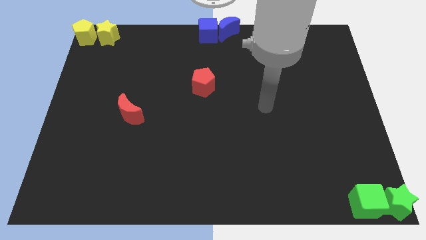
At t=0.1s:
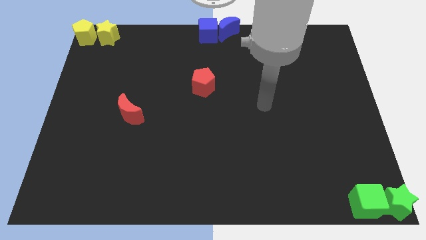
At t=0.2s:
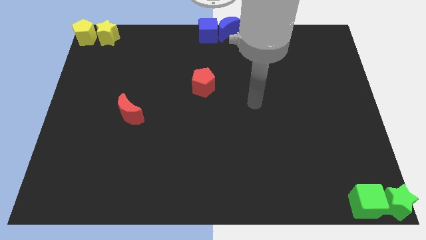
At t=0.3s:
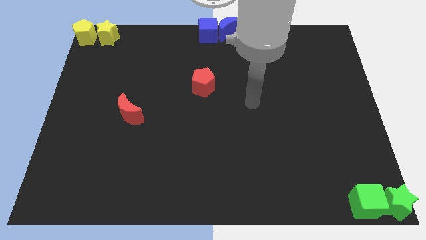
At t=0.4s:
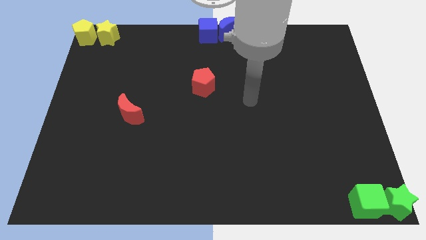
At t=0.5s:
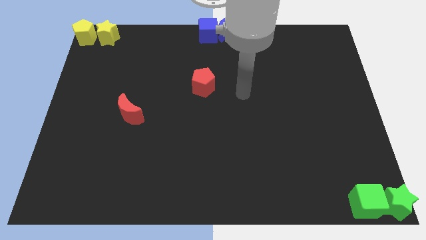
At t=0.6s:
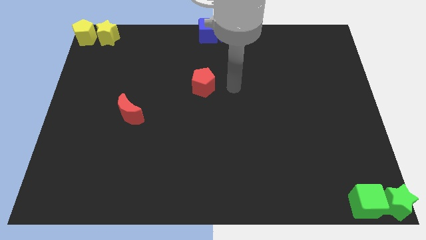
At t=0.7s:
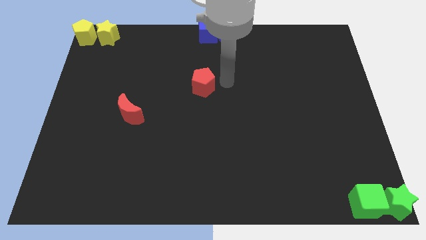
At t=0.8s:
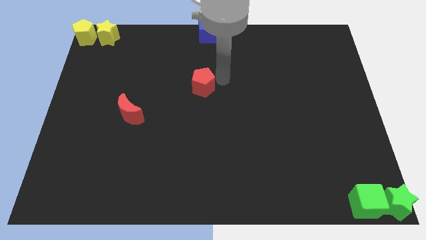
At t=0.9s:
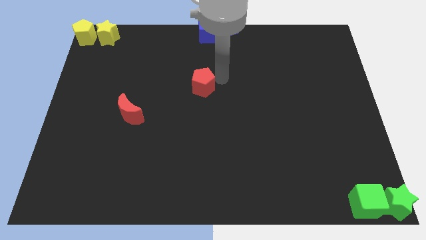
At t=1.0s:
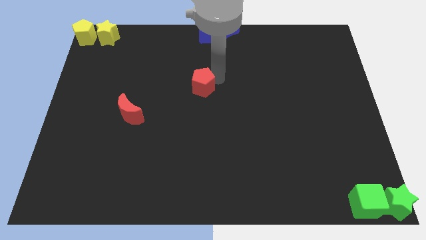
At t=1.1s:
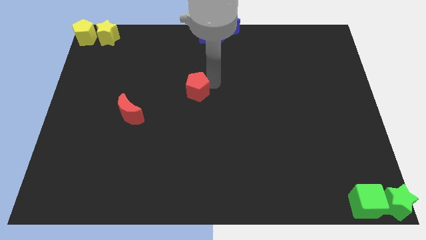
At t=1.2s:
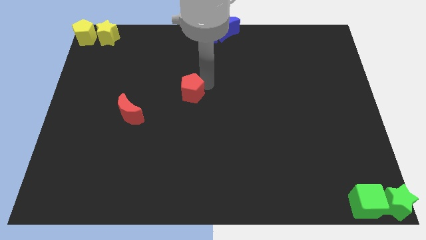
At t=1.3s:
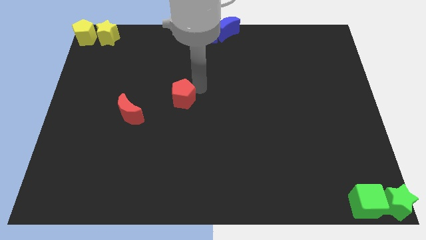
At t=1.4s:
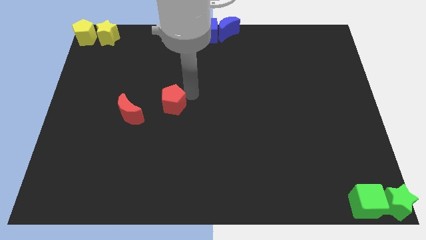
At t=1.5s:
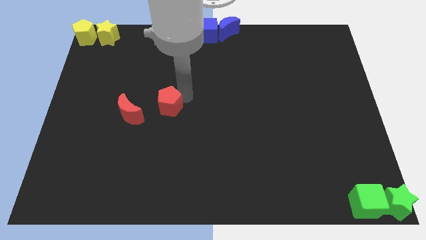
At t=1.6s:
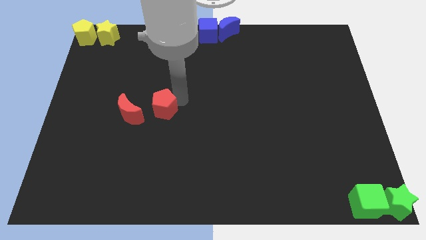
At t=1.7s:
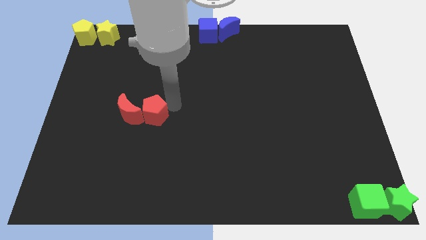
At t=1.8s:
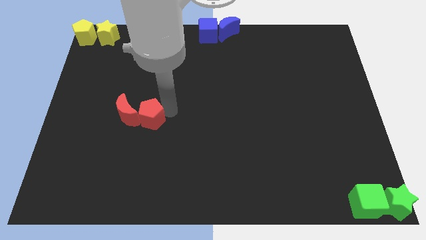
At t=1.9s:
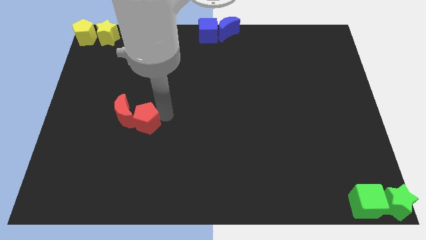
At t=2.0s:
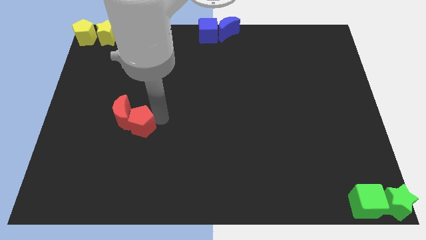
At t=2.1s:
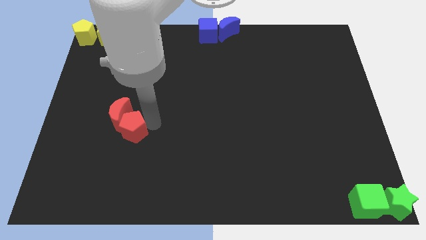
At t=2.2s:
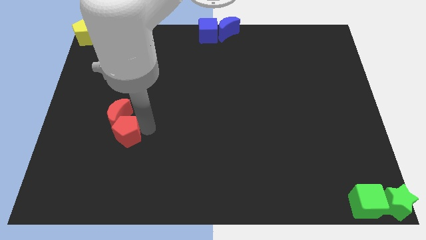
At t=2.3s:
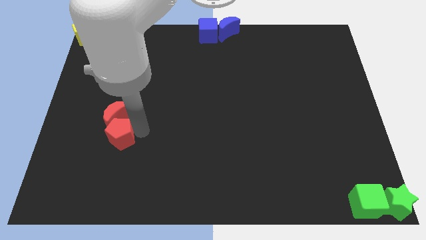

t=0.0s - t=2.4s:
move the red pentagon away from the vertical bottom side of the blue cube

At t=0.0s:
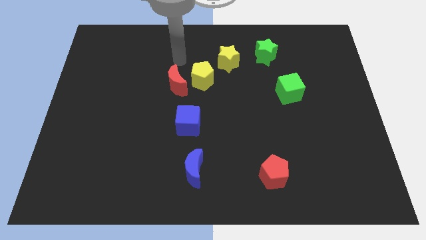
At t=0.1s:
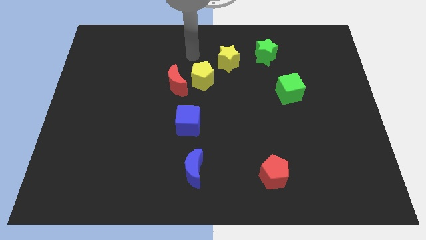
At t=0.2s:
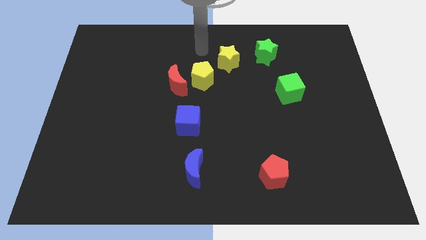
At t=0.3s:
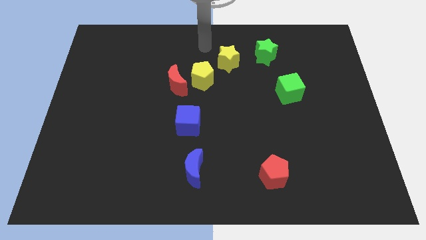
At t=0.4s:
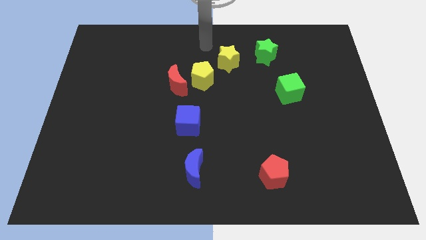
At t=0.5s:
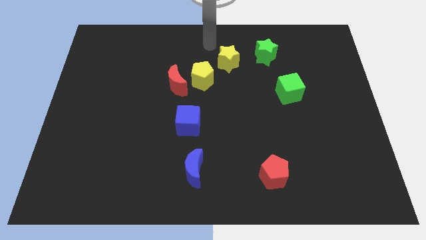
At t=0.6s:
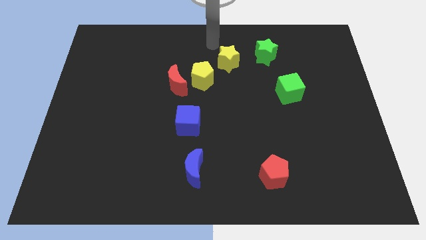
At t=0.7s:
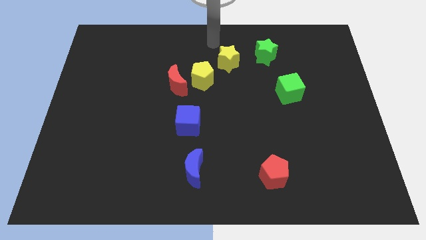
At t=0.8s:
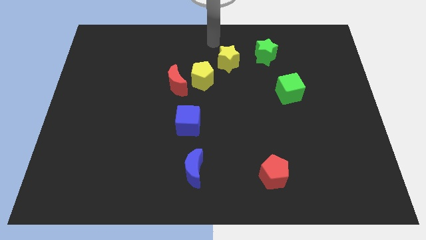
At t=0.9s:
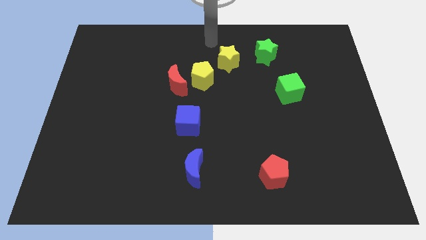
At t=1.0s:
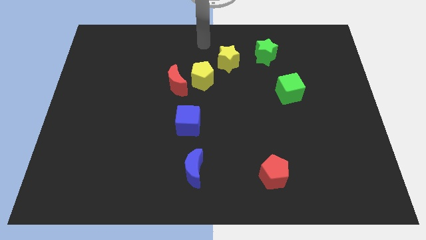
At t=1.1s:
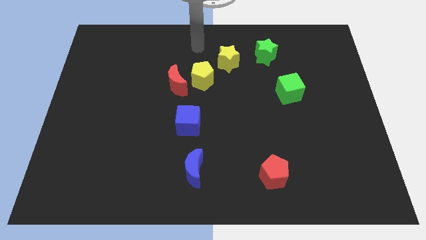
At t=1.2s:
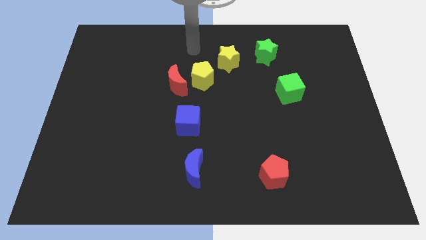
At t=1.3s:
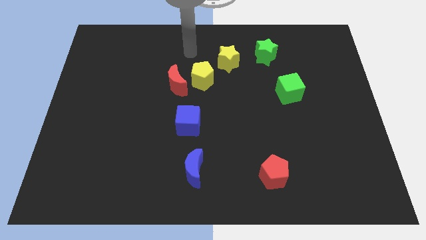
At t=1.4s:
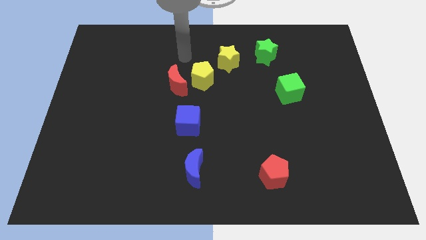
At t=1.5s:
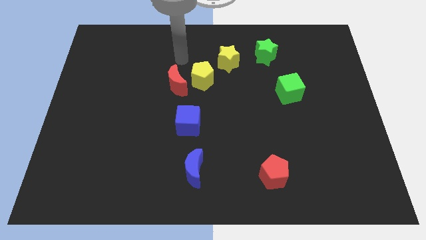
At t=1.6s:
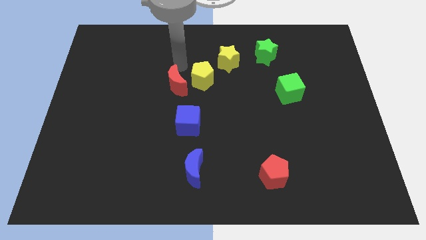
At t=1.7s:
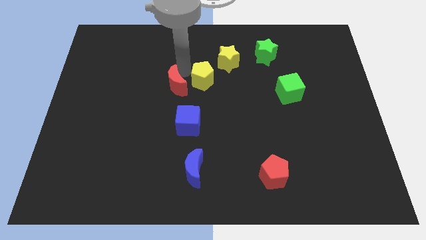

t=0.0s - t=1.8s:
point above the red moon

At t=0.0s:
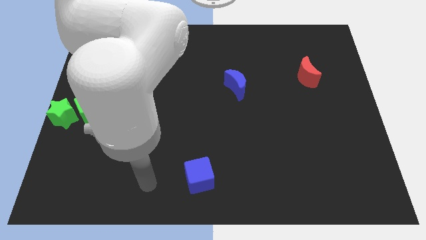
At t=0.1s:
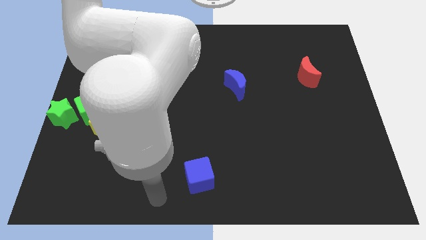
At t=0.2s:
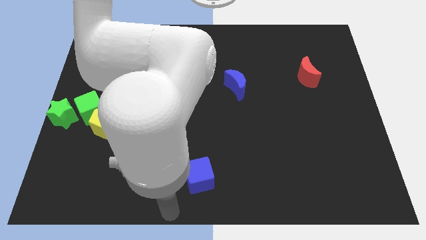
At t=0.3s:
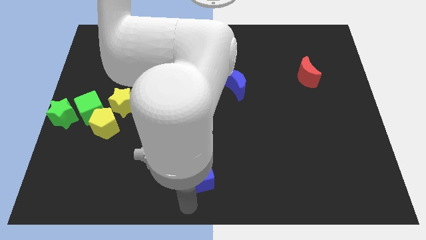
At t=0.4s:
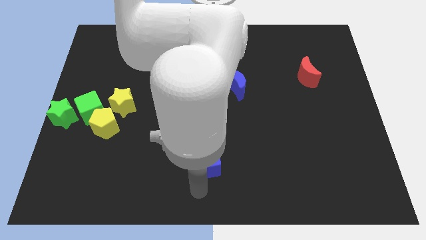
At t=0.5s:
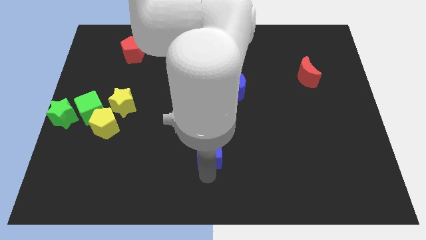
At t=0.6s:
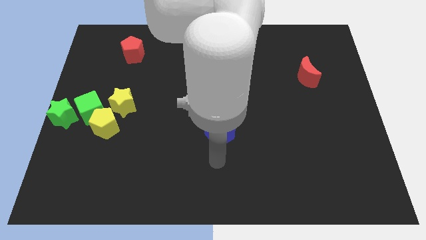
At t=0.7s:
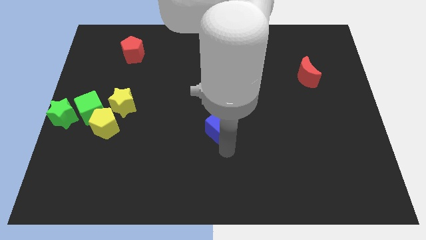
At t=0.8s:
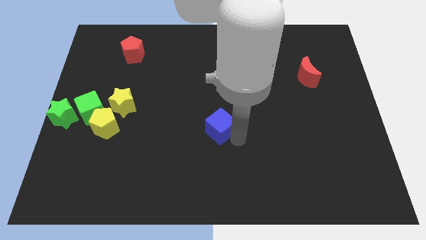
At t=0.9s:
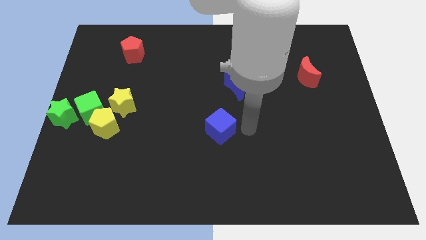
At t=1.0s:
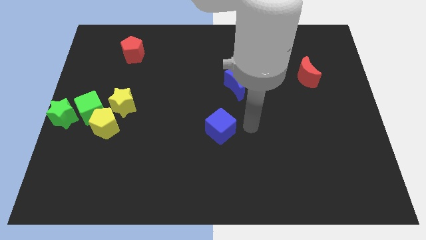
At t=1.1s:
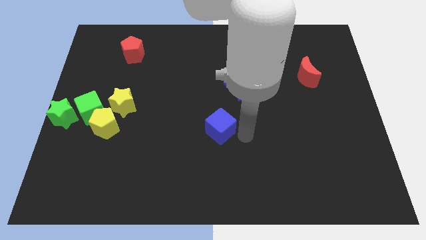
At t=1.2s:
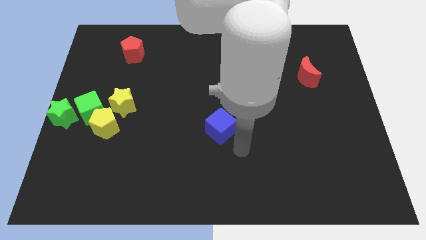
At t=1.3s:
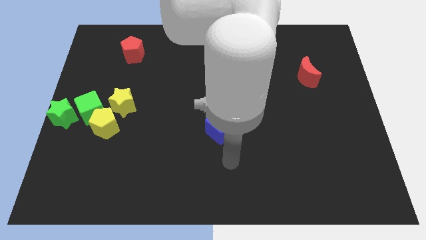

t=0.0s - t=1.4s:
push the blue cube slightly to the top side of the board

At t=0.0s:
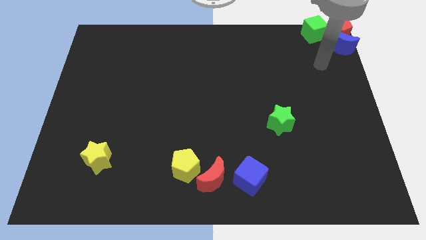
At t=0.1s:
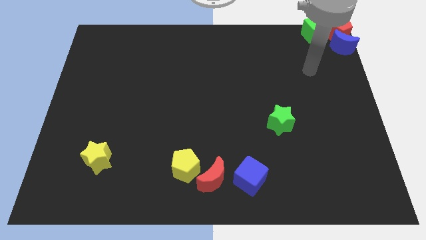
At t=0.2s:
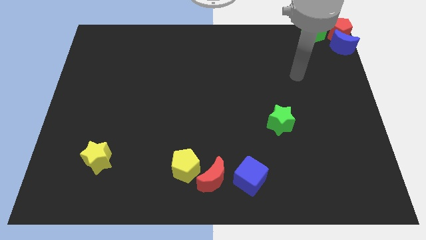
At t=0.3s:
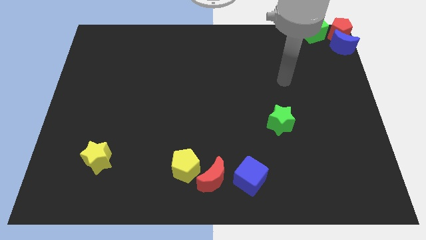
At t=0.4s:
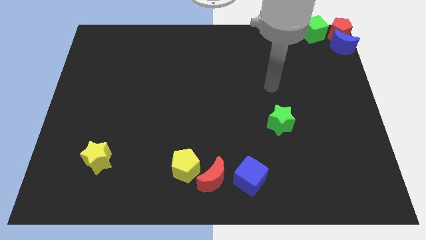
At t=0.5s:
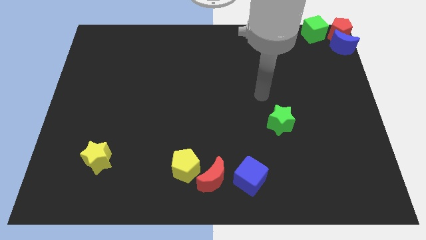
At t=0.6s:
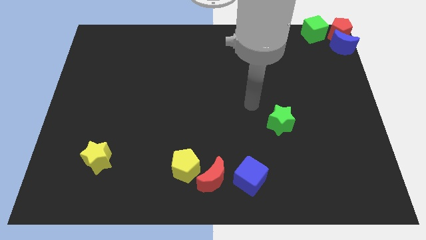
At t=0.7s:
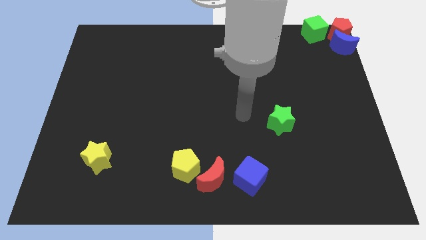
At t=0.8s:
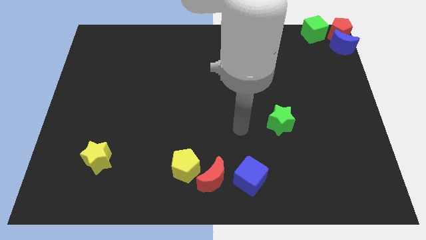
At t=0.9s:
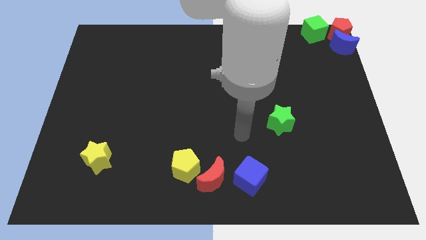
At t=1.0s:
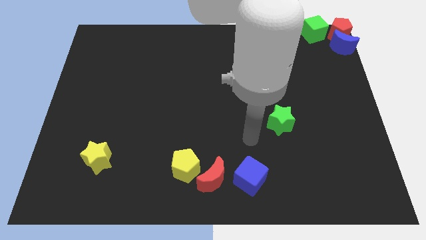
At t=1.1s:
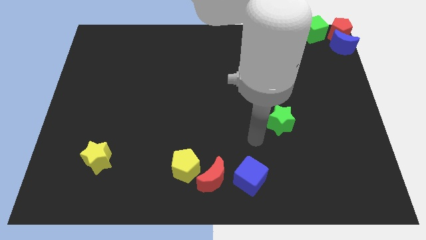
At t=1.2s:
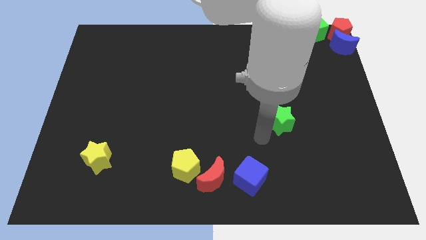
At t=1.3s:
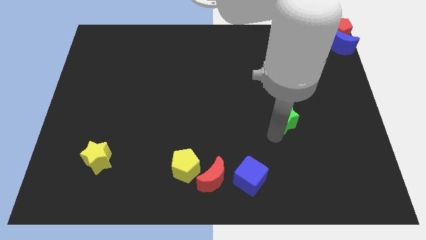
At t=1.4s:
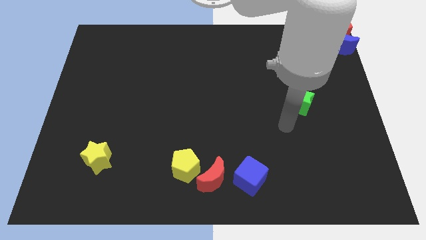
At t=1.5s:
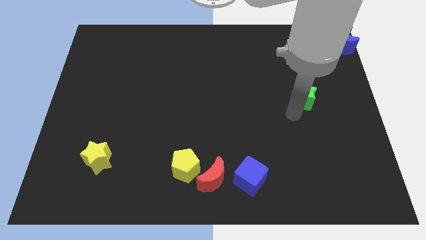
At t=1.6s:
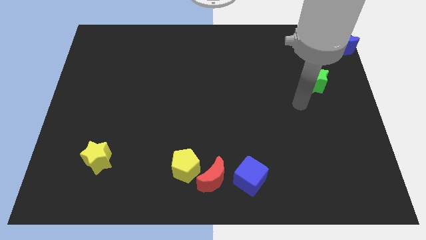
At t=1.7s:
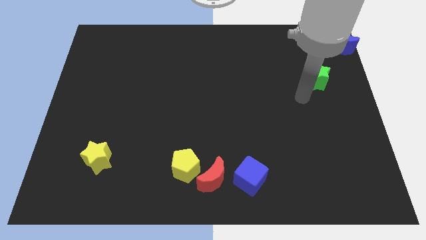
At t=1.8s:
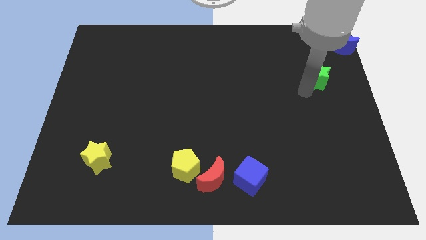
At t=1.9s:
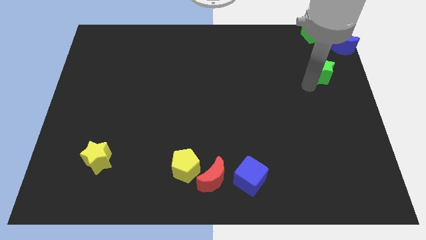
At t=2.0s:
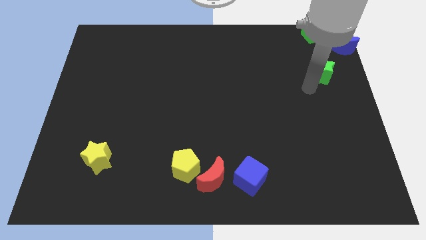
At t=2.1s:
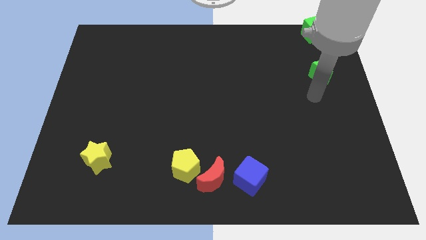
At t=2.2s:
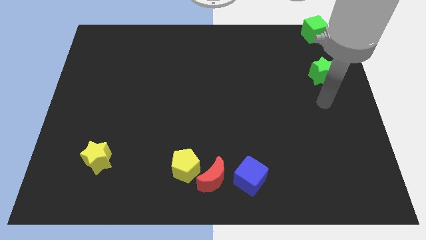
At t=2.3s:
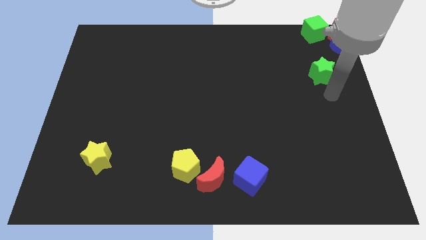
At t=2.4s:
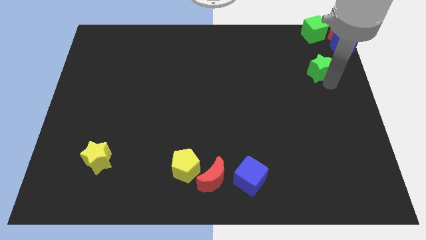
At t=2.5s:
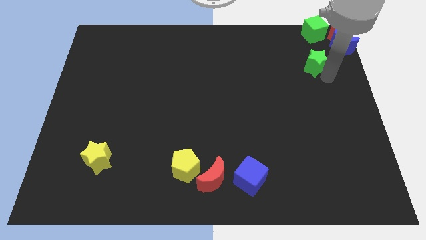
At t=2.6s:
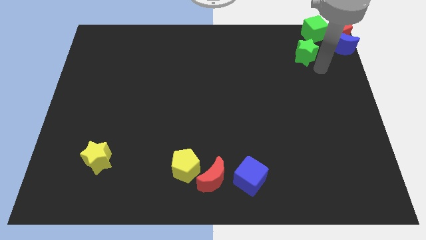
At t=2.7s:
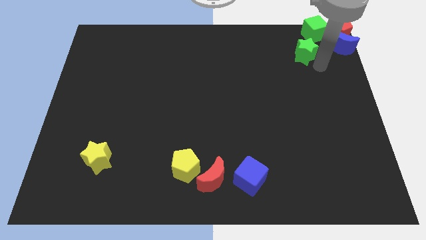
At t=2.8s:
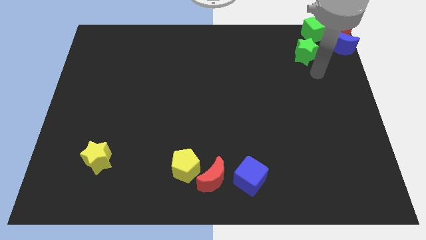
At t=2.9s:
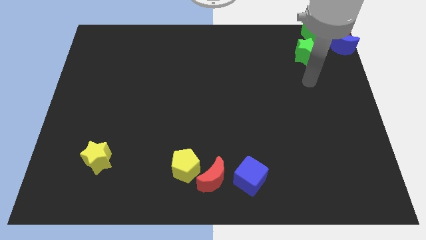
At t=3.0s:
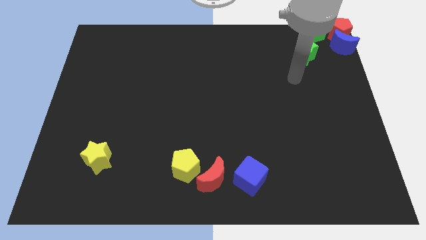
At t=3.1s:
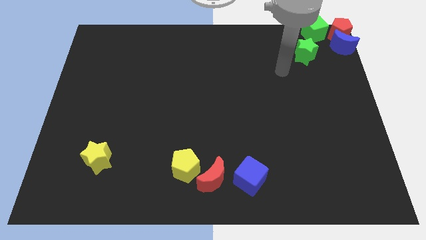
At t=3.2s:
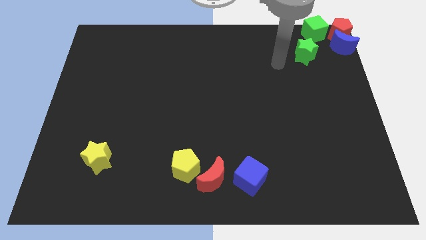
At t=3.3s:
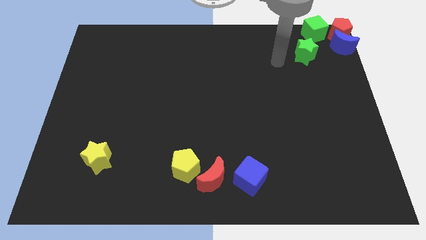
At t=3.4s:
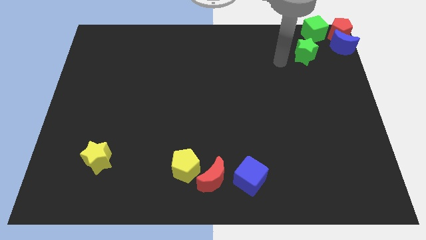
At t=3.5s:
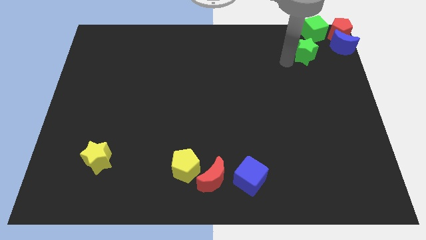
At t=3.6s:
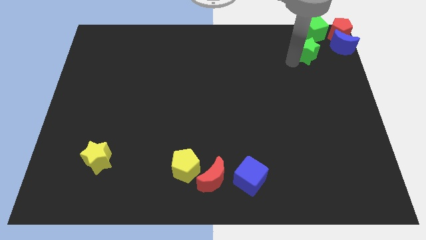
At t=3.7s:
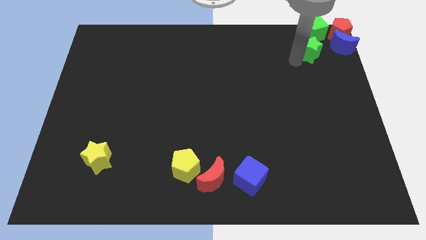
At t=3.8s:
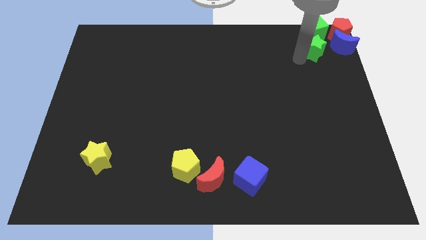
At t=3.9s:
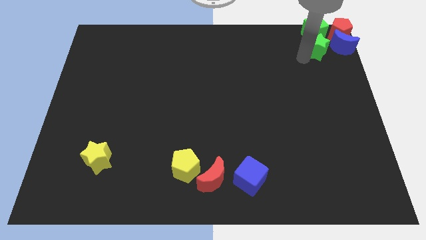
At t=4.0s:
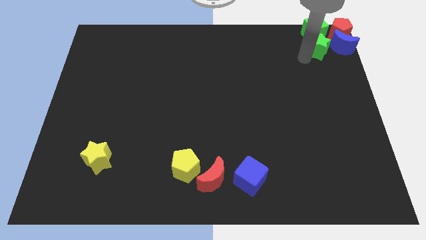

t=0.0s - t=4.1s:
place the green star below the green cube
